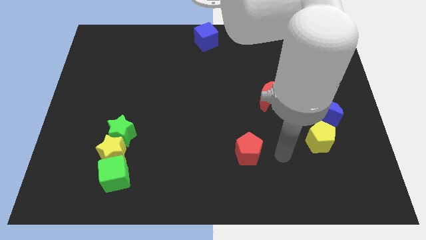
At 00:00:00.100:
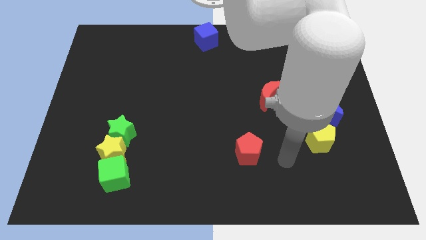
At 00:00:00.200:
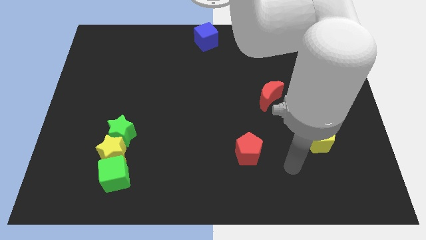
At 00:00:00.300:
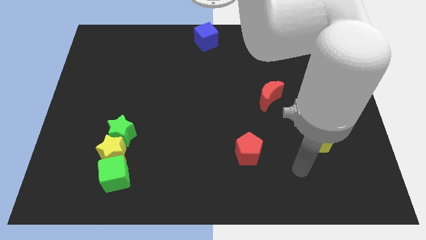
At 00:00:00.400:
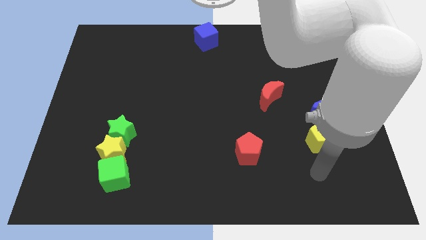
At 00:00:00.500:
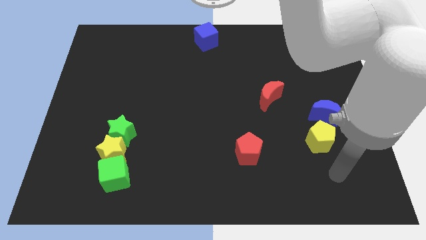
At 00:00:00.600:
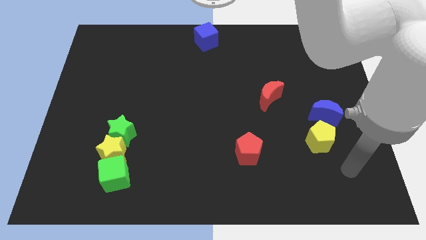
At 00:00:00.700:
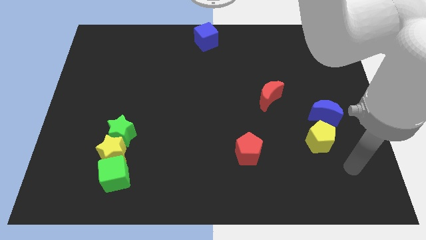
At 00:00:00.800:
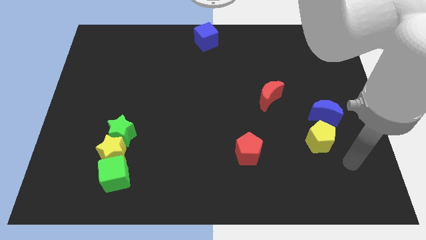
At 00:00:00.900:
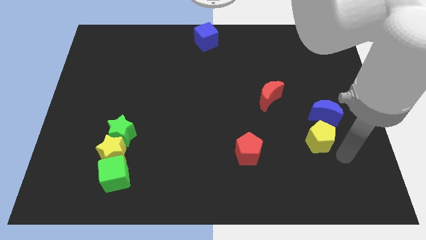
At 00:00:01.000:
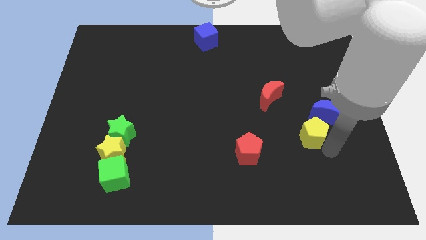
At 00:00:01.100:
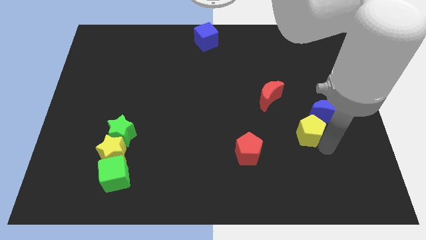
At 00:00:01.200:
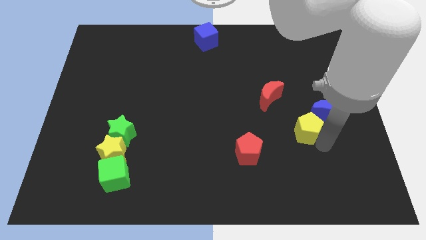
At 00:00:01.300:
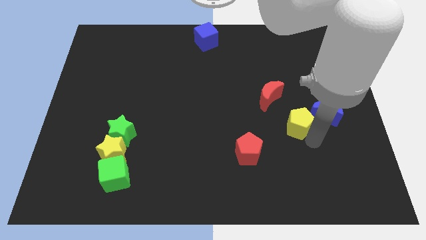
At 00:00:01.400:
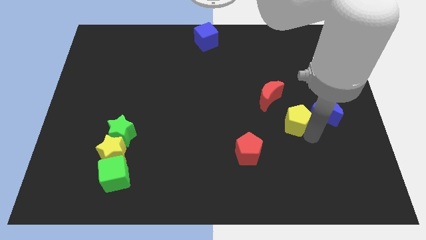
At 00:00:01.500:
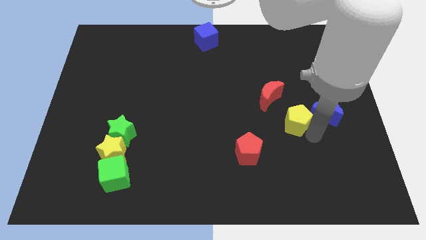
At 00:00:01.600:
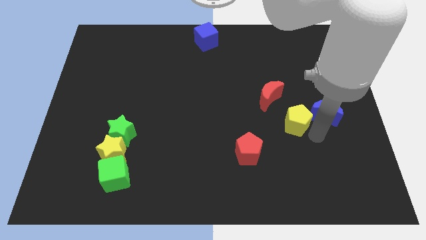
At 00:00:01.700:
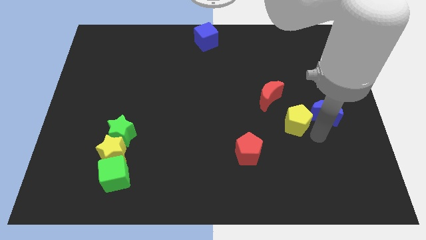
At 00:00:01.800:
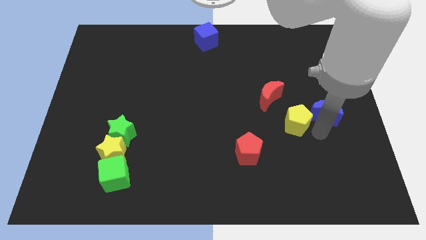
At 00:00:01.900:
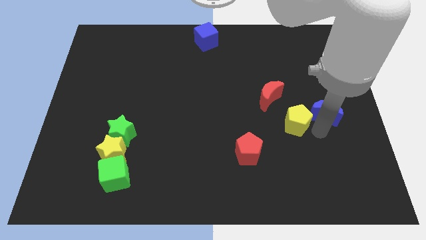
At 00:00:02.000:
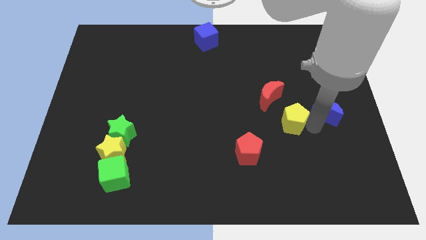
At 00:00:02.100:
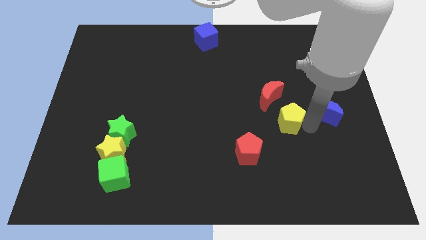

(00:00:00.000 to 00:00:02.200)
place the yellow pentagon to the left of the blue crescent

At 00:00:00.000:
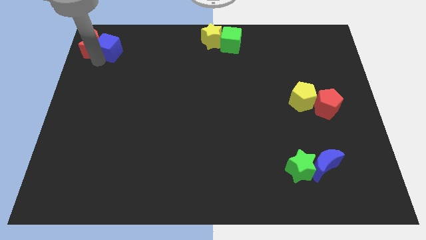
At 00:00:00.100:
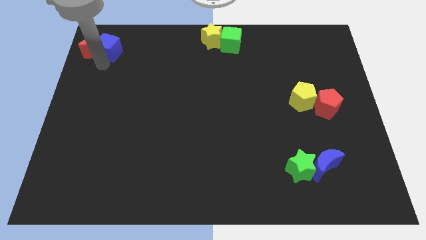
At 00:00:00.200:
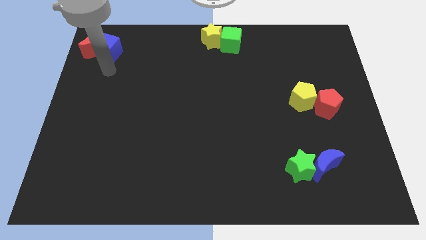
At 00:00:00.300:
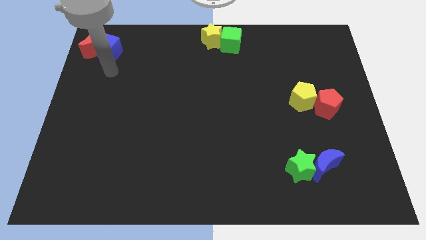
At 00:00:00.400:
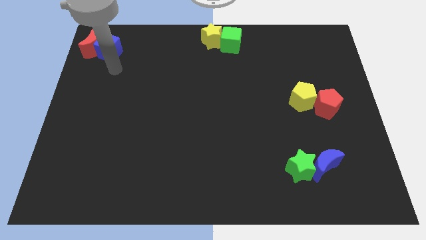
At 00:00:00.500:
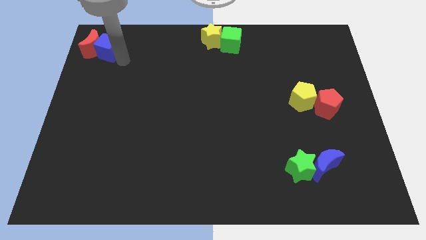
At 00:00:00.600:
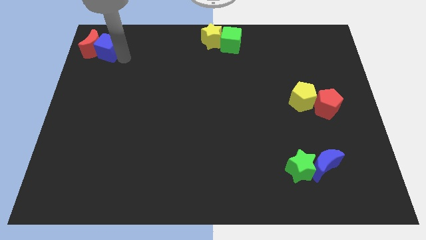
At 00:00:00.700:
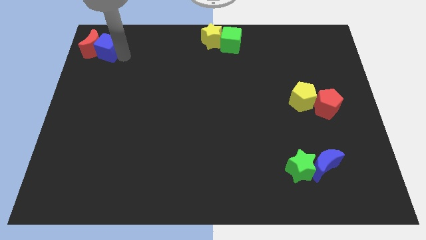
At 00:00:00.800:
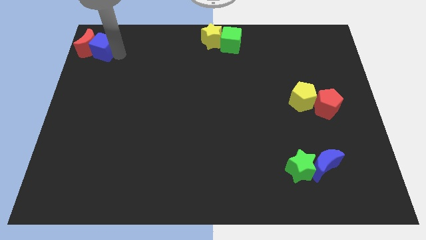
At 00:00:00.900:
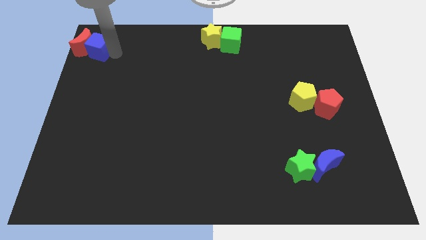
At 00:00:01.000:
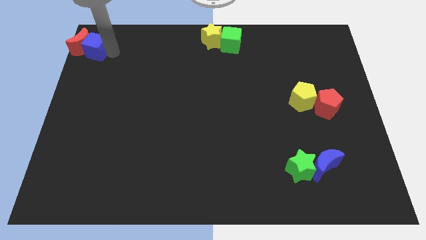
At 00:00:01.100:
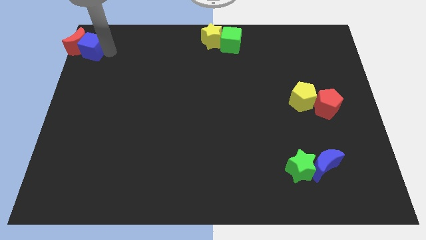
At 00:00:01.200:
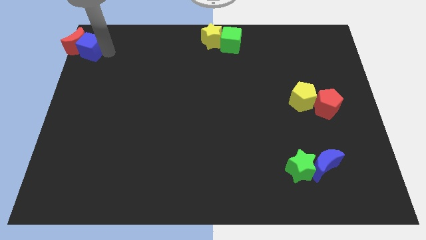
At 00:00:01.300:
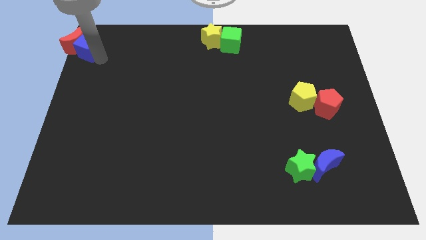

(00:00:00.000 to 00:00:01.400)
move the blue cube and red moon to the top left

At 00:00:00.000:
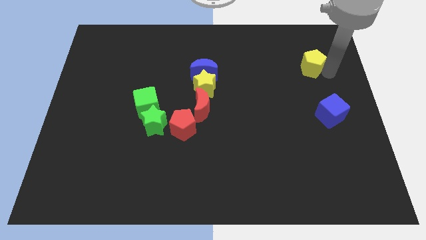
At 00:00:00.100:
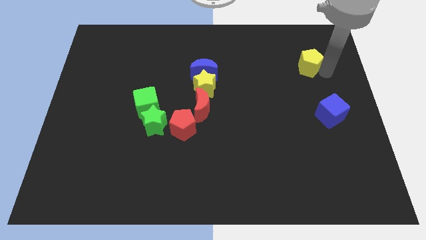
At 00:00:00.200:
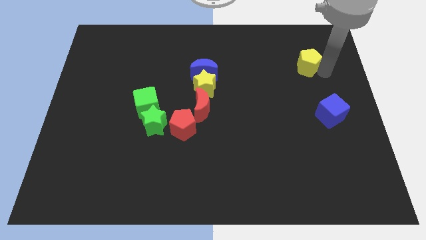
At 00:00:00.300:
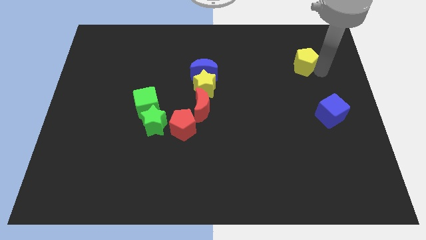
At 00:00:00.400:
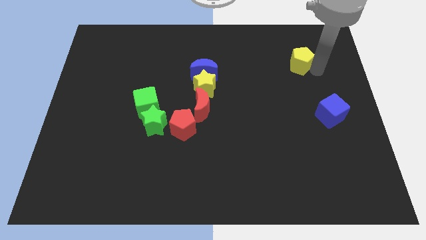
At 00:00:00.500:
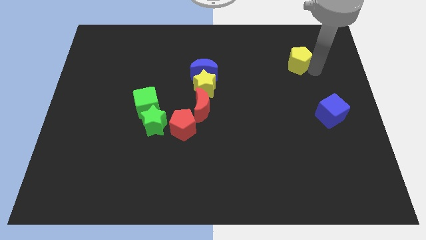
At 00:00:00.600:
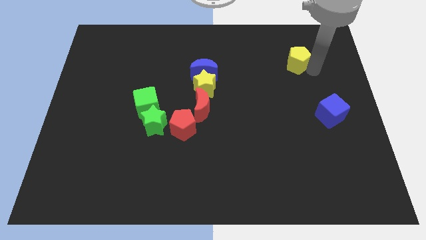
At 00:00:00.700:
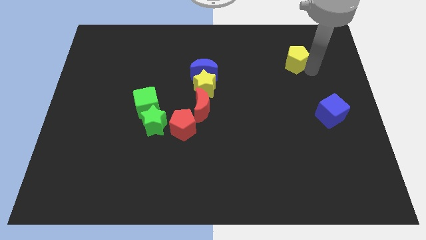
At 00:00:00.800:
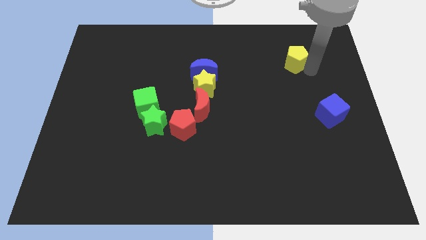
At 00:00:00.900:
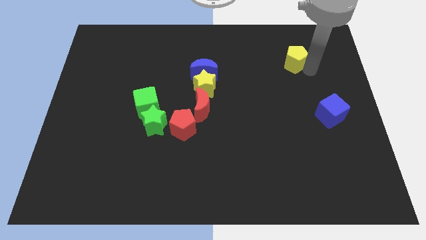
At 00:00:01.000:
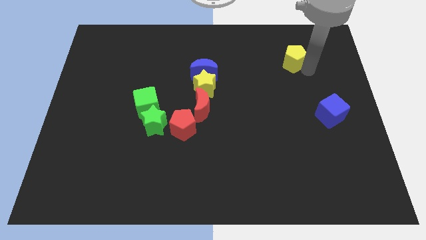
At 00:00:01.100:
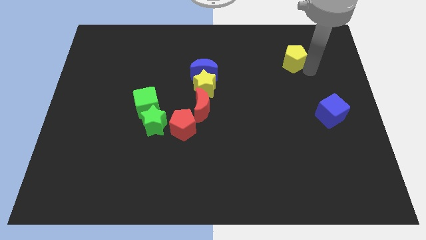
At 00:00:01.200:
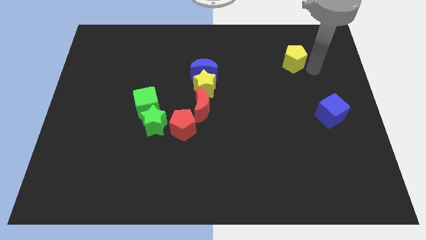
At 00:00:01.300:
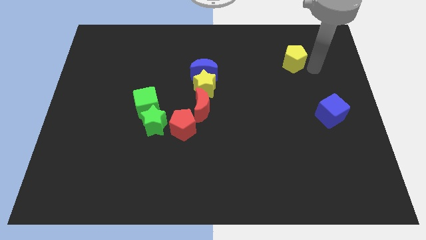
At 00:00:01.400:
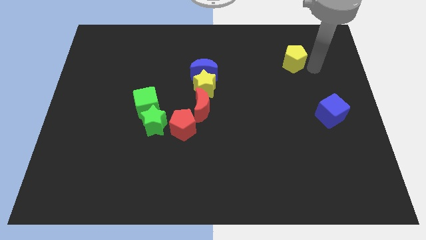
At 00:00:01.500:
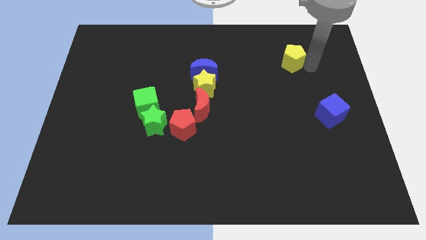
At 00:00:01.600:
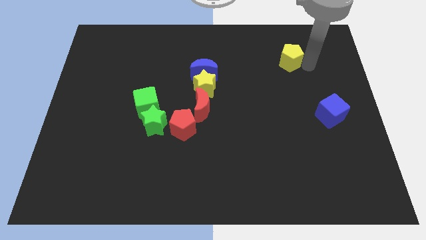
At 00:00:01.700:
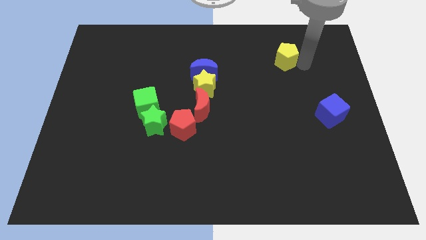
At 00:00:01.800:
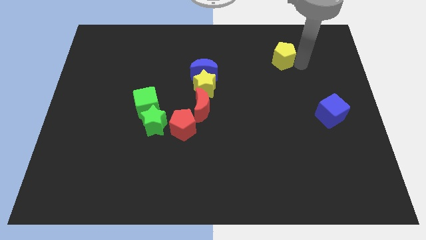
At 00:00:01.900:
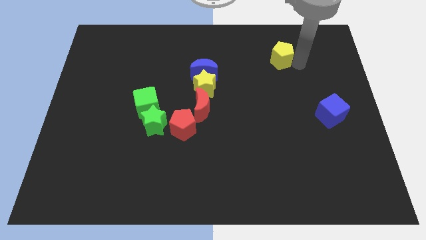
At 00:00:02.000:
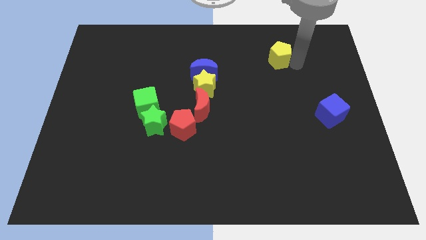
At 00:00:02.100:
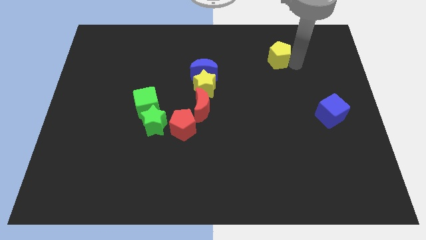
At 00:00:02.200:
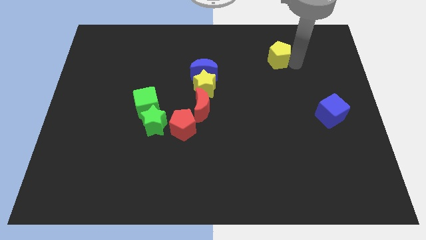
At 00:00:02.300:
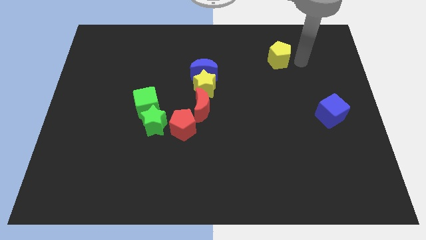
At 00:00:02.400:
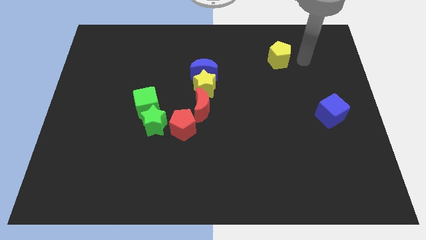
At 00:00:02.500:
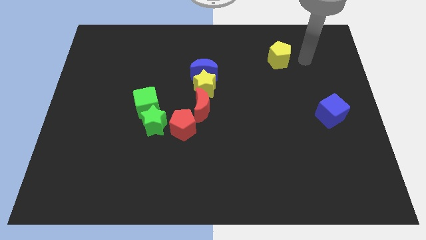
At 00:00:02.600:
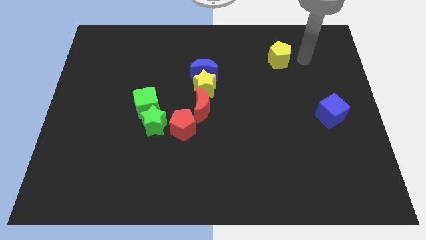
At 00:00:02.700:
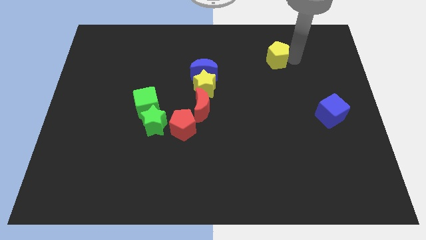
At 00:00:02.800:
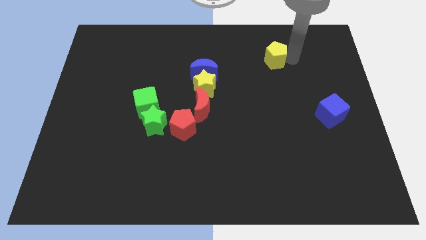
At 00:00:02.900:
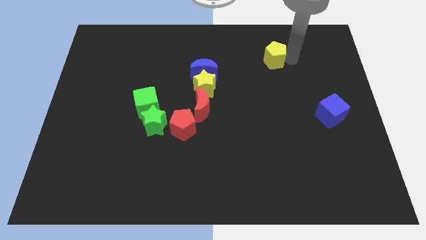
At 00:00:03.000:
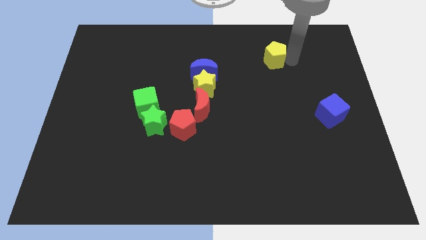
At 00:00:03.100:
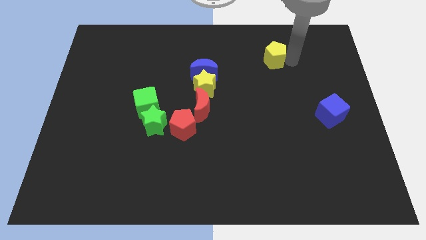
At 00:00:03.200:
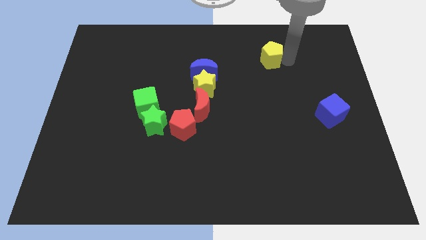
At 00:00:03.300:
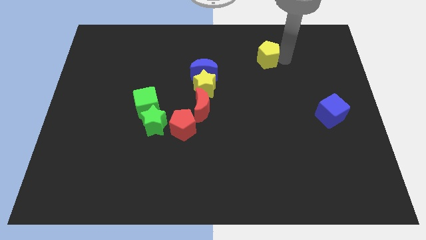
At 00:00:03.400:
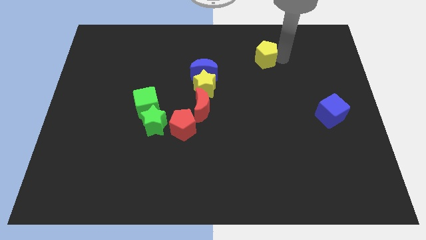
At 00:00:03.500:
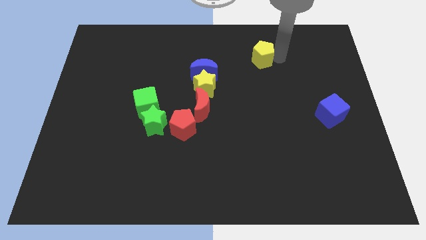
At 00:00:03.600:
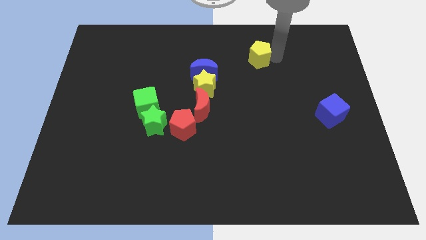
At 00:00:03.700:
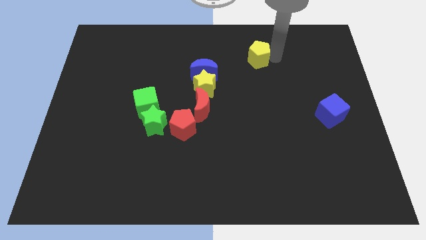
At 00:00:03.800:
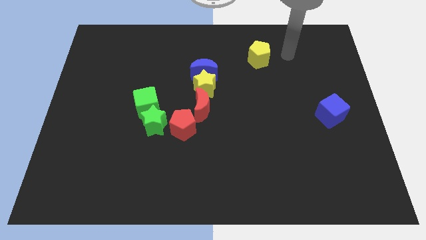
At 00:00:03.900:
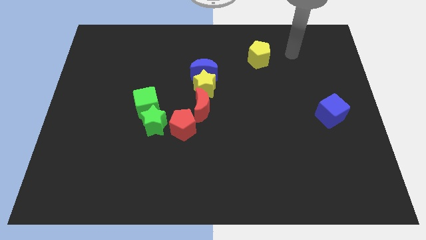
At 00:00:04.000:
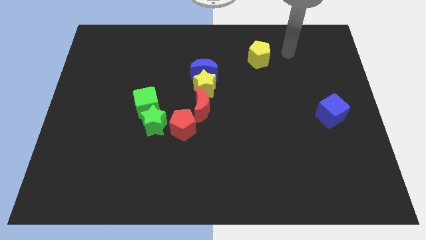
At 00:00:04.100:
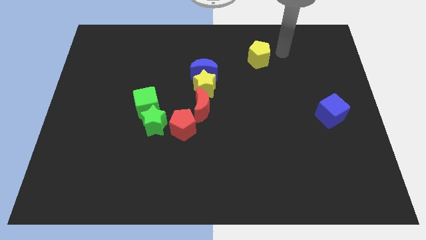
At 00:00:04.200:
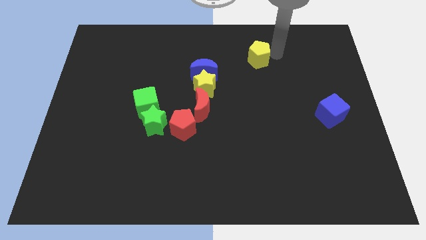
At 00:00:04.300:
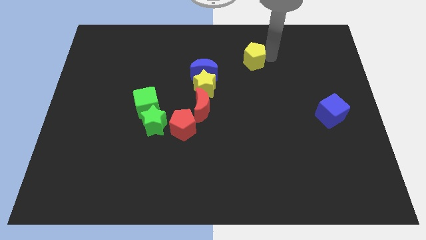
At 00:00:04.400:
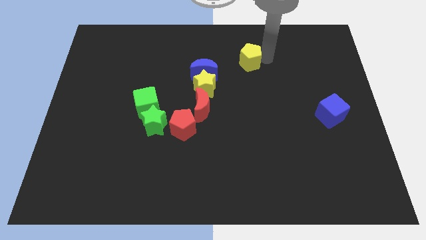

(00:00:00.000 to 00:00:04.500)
place the yellow pentagon diagonally top right to the blue moon

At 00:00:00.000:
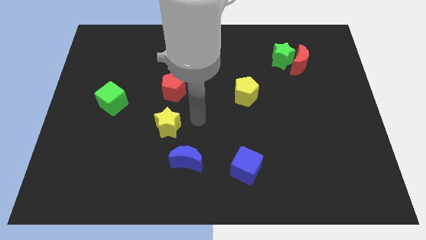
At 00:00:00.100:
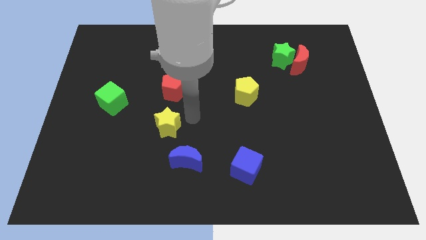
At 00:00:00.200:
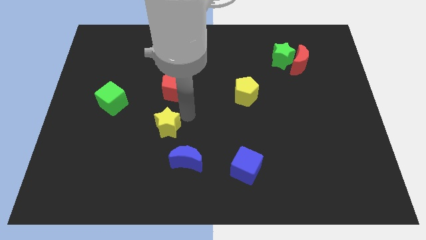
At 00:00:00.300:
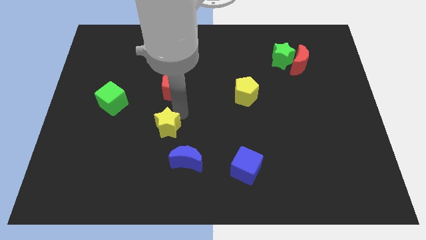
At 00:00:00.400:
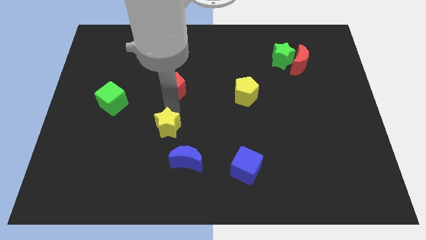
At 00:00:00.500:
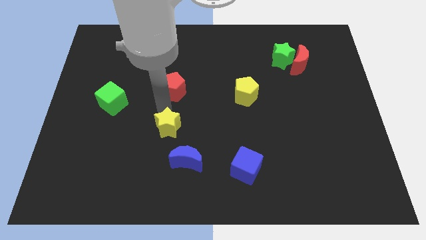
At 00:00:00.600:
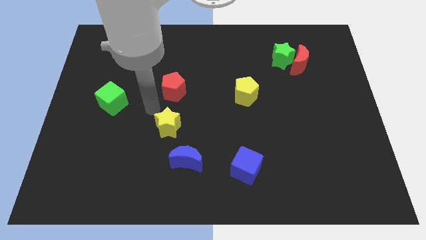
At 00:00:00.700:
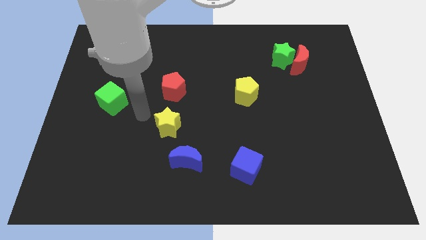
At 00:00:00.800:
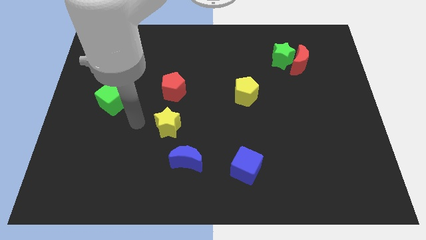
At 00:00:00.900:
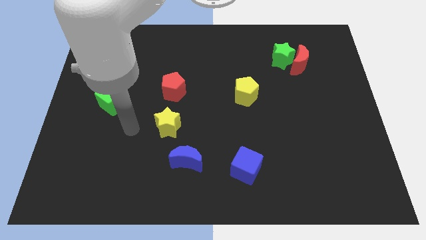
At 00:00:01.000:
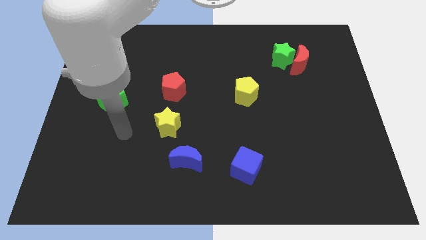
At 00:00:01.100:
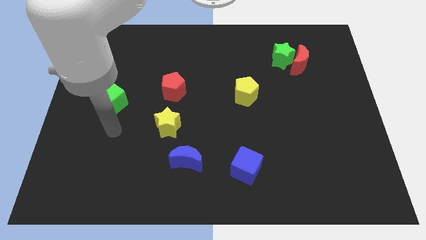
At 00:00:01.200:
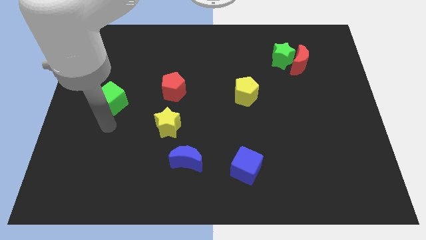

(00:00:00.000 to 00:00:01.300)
place your arm below green cube
